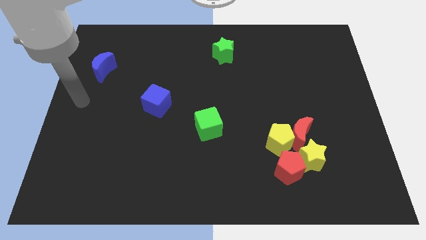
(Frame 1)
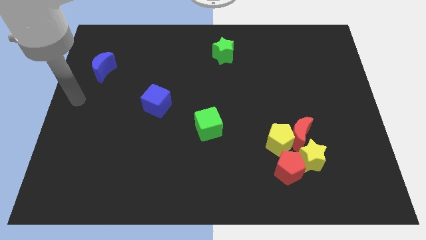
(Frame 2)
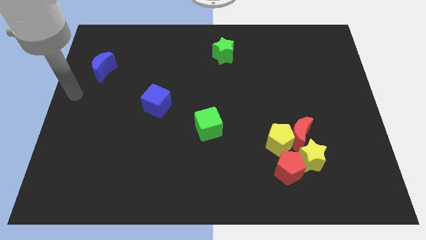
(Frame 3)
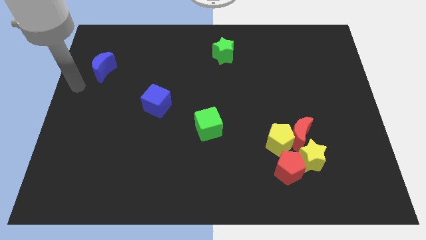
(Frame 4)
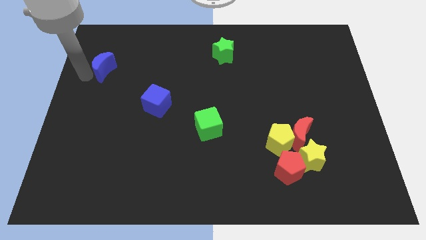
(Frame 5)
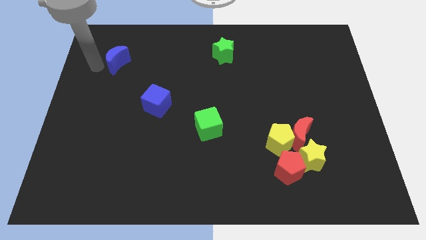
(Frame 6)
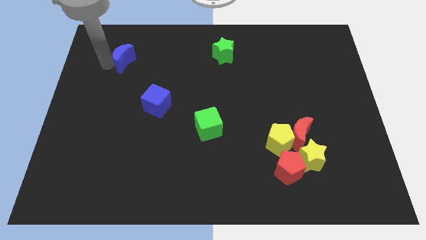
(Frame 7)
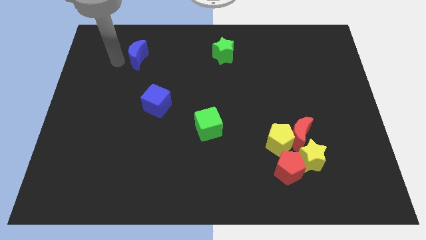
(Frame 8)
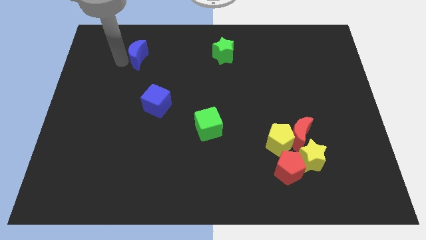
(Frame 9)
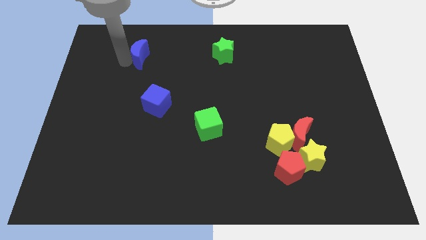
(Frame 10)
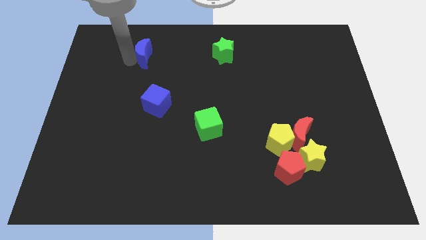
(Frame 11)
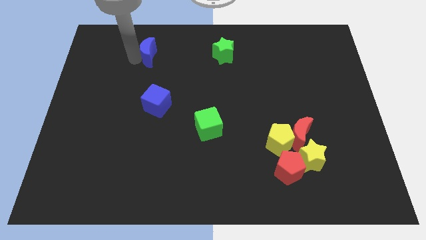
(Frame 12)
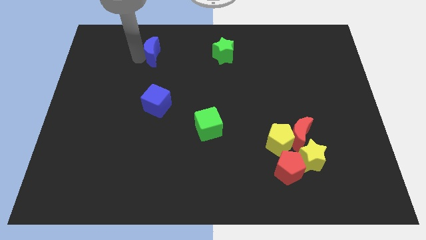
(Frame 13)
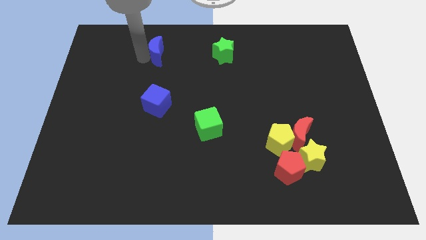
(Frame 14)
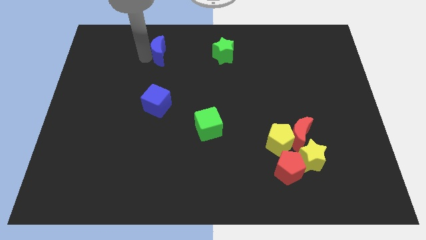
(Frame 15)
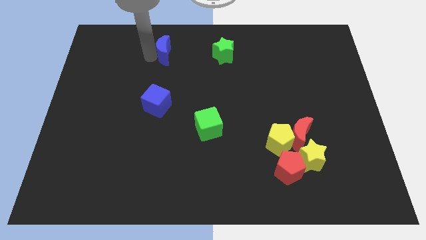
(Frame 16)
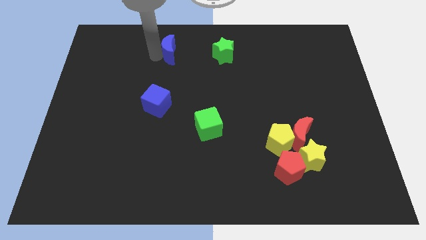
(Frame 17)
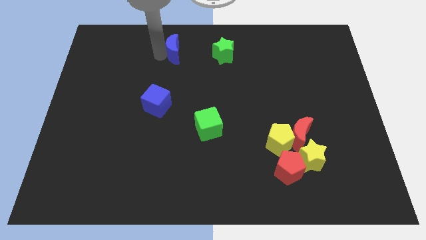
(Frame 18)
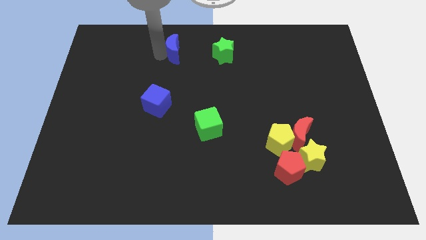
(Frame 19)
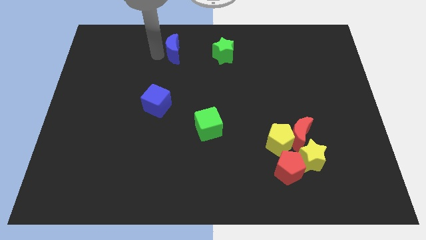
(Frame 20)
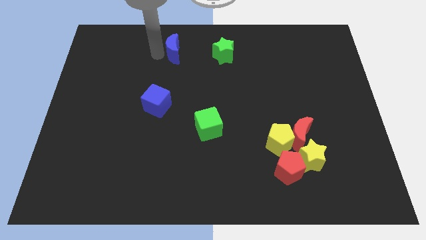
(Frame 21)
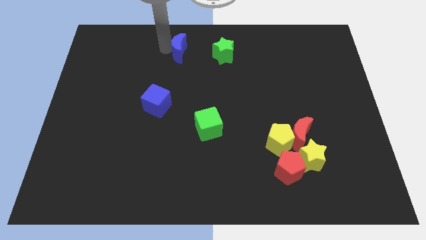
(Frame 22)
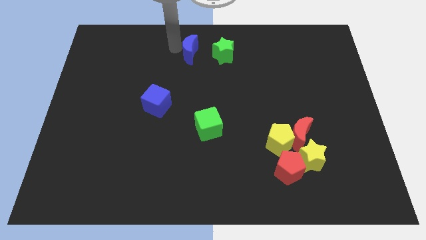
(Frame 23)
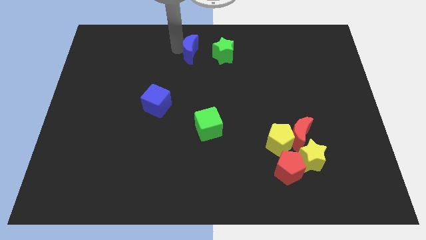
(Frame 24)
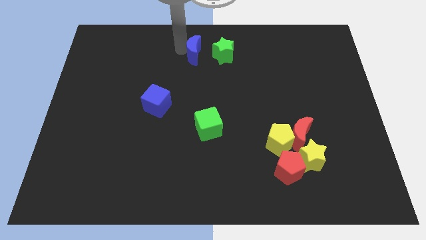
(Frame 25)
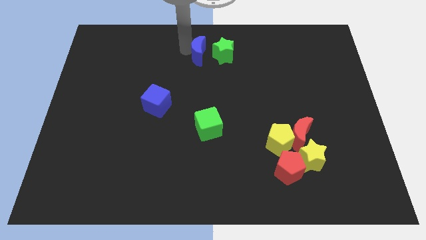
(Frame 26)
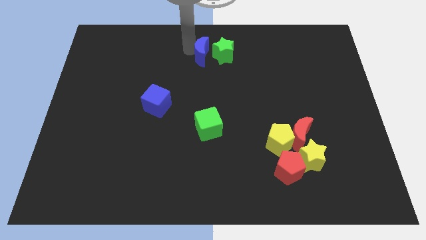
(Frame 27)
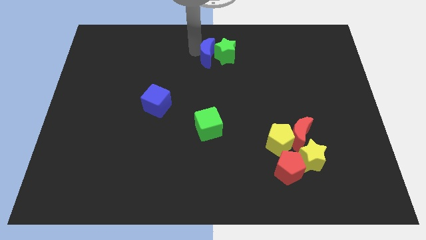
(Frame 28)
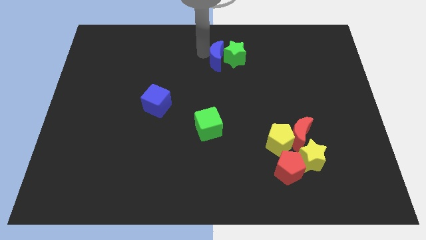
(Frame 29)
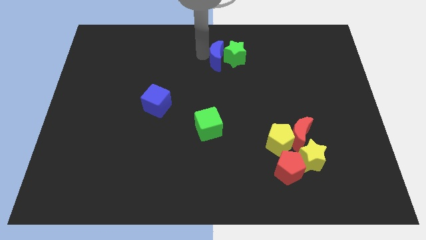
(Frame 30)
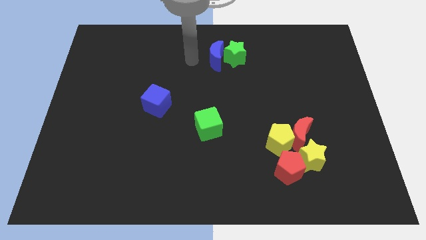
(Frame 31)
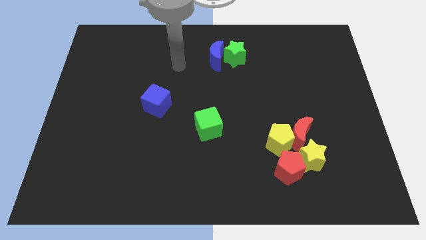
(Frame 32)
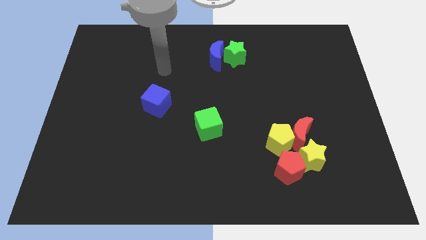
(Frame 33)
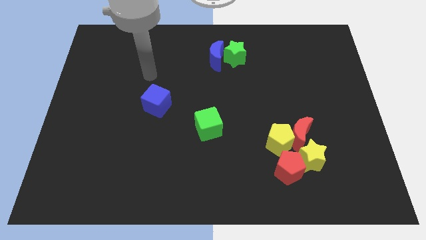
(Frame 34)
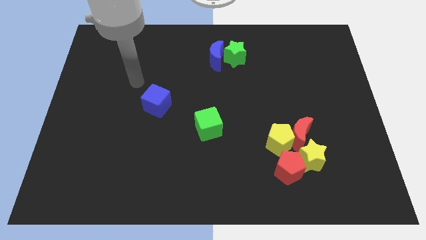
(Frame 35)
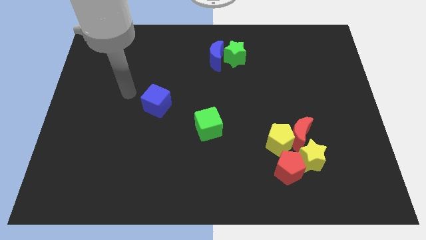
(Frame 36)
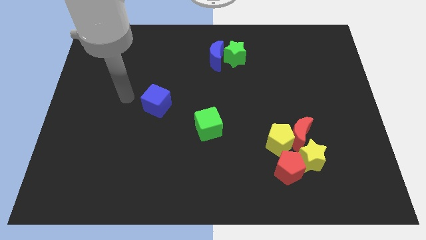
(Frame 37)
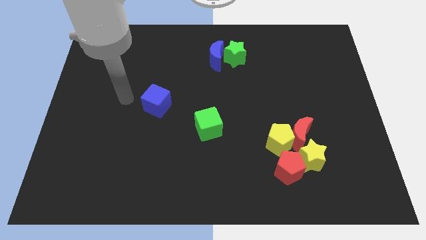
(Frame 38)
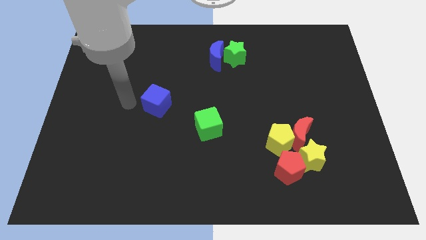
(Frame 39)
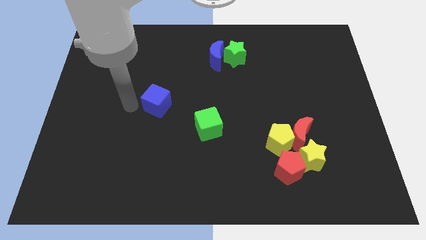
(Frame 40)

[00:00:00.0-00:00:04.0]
push the blue crescent into the left side of the green star

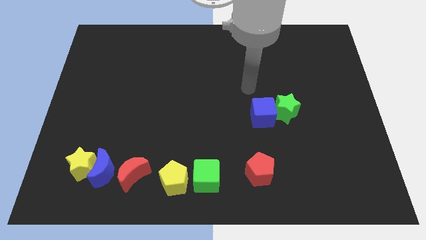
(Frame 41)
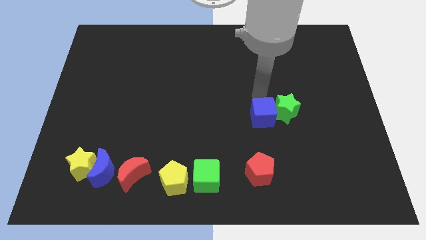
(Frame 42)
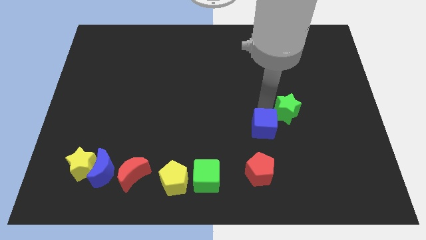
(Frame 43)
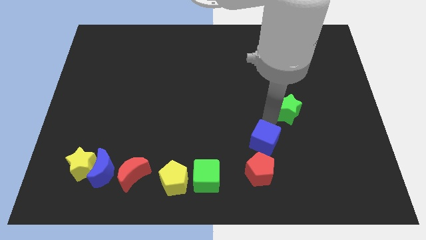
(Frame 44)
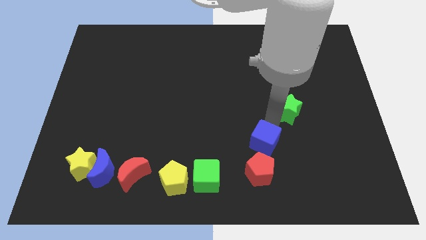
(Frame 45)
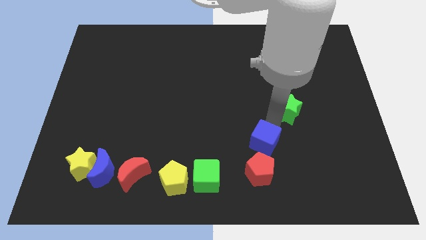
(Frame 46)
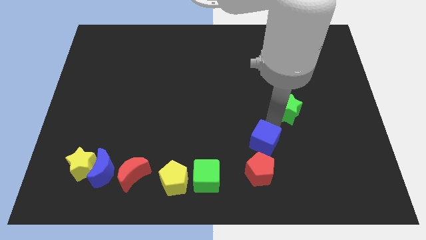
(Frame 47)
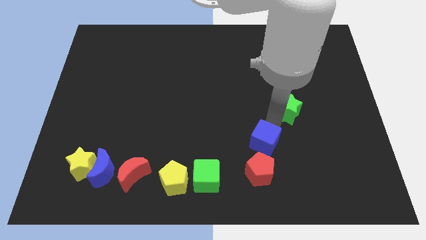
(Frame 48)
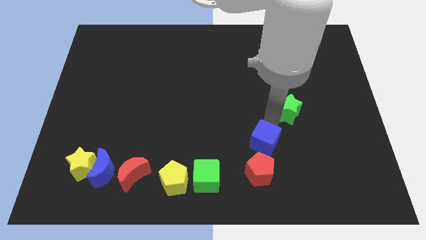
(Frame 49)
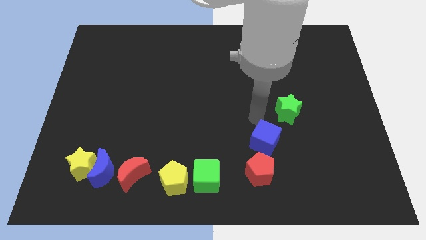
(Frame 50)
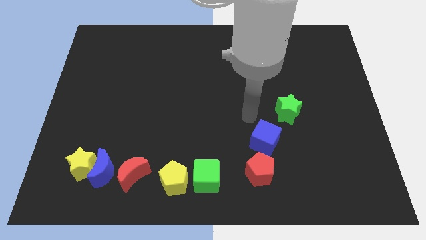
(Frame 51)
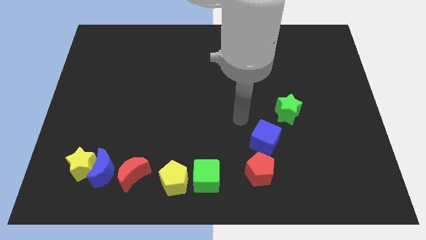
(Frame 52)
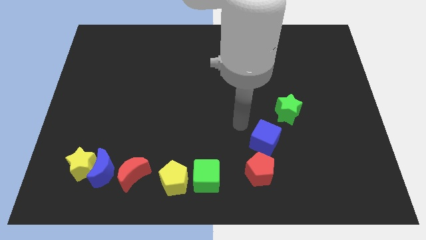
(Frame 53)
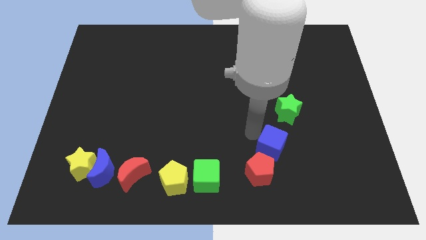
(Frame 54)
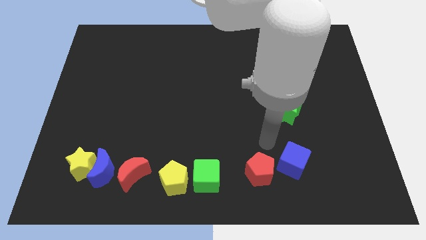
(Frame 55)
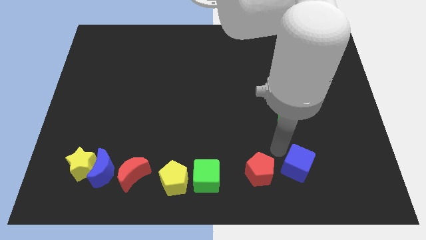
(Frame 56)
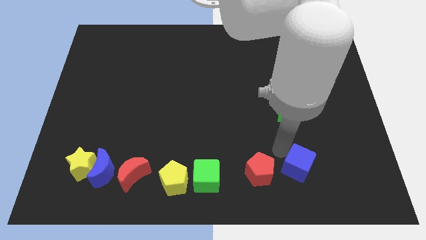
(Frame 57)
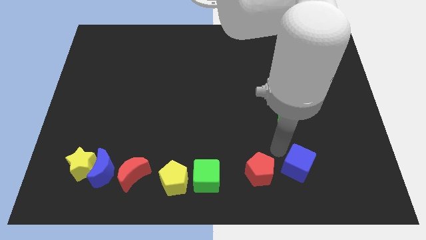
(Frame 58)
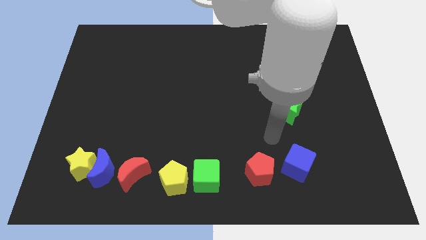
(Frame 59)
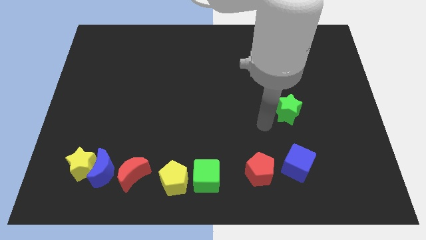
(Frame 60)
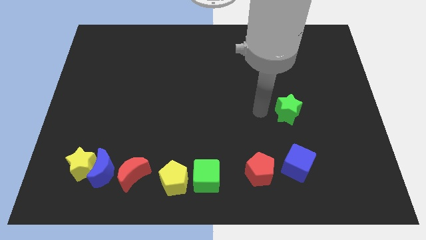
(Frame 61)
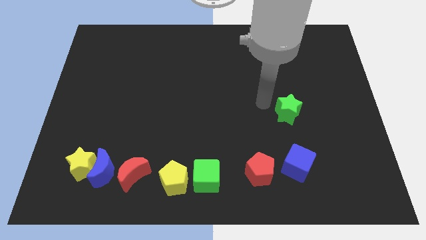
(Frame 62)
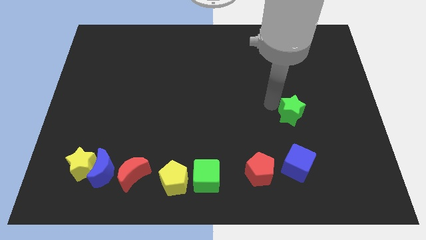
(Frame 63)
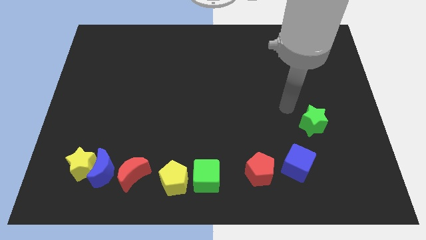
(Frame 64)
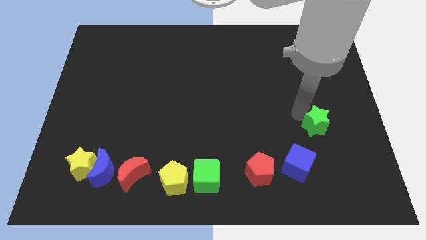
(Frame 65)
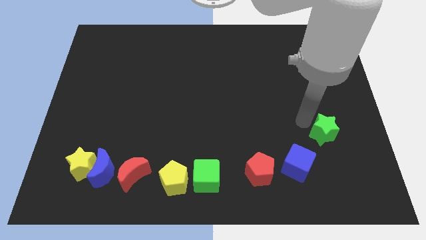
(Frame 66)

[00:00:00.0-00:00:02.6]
move the blue cube and green star to the bottom of the board

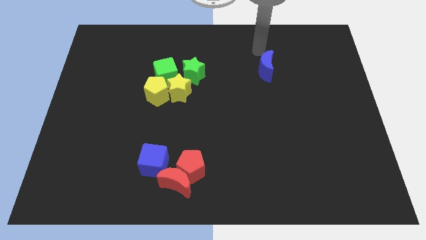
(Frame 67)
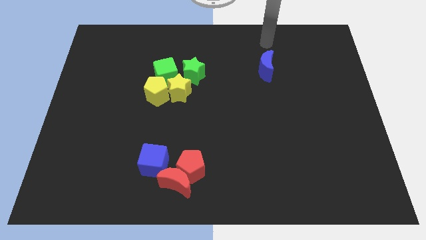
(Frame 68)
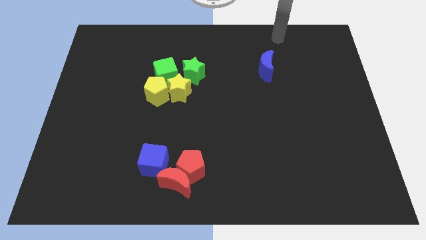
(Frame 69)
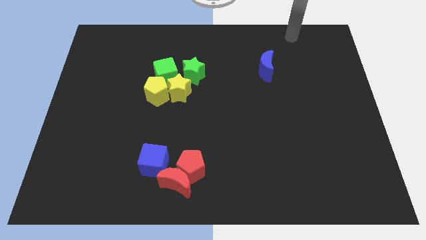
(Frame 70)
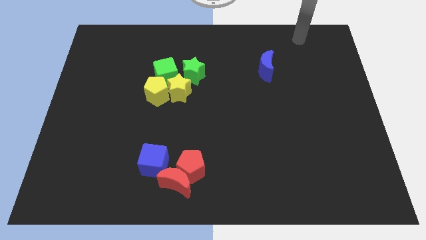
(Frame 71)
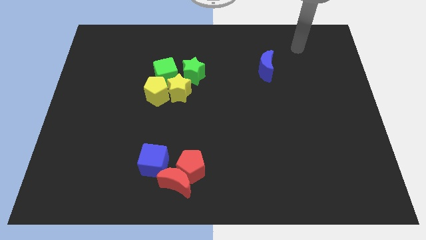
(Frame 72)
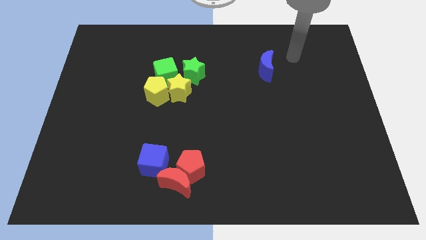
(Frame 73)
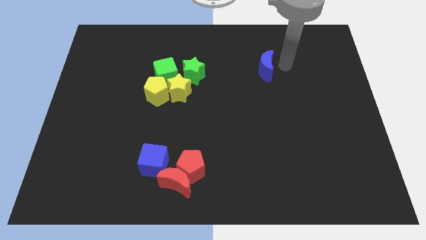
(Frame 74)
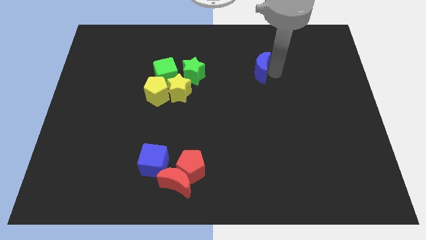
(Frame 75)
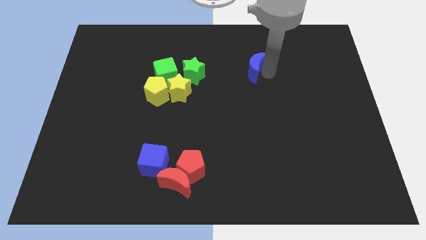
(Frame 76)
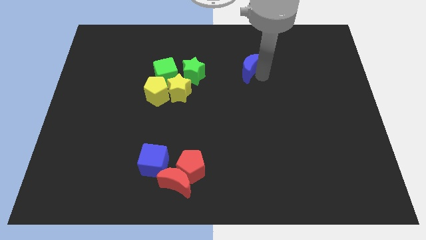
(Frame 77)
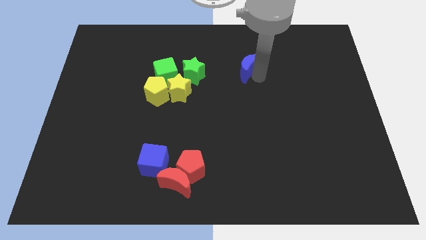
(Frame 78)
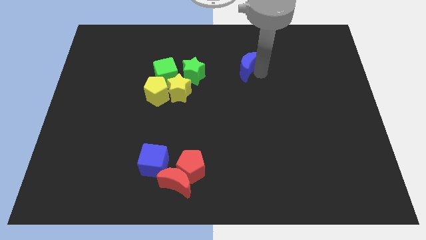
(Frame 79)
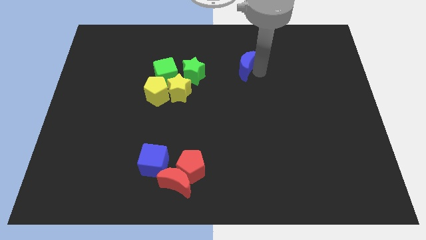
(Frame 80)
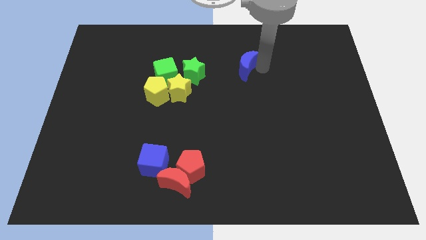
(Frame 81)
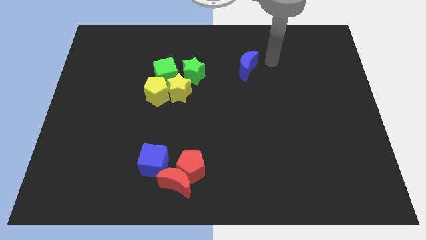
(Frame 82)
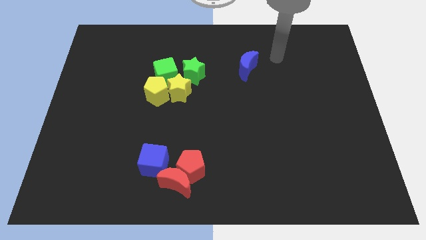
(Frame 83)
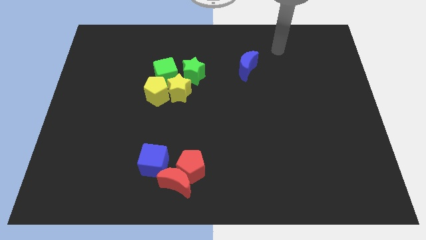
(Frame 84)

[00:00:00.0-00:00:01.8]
move the blue moon to the left side of the board

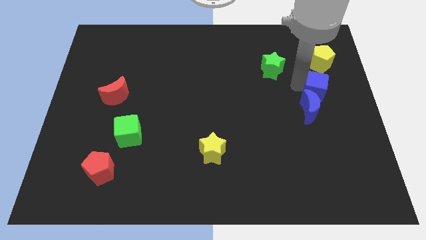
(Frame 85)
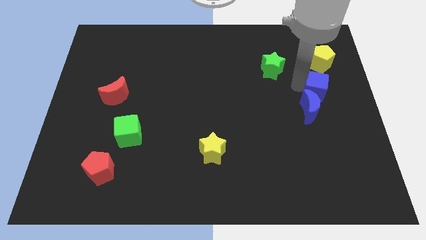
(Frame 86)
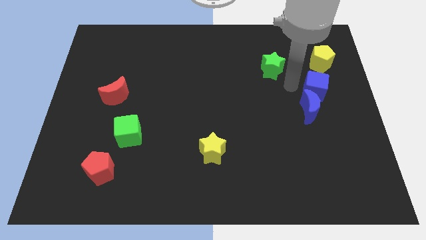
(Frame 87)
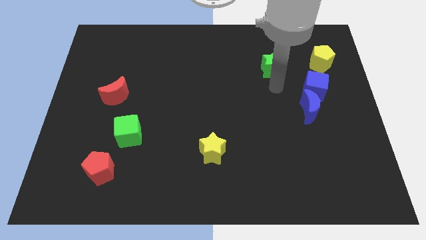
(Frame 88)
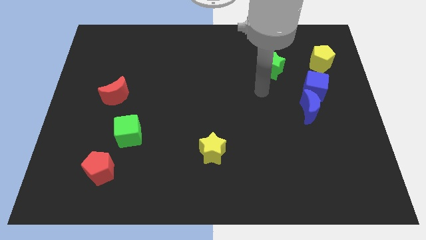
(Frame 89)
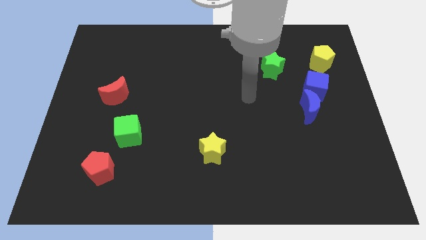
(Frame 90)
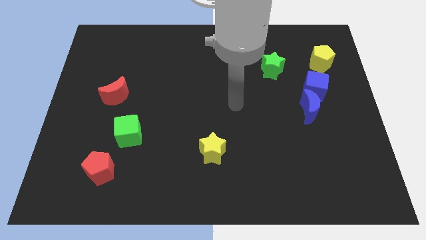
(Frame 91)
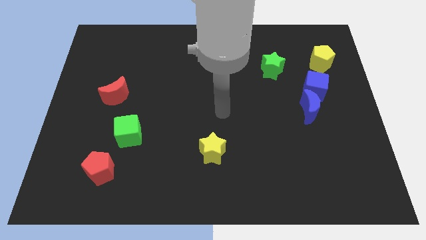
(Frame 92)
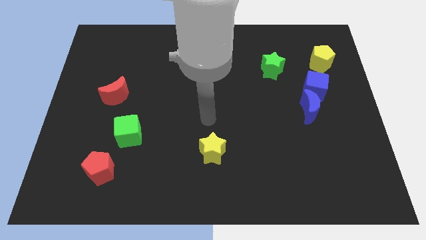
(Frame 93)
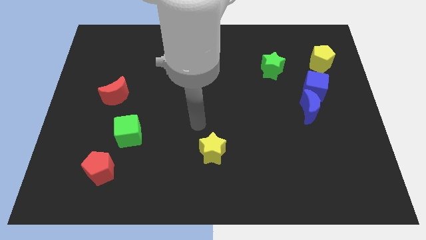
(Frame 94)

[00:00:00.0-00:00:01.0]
place arm on the top of yellow star
